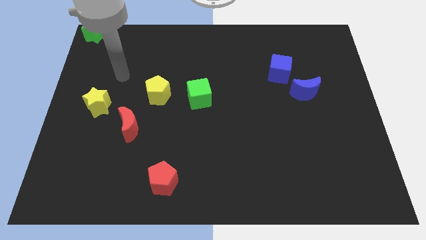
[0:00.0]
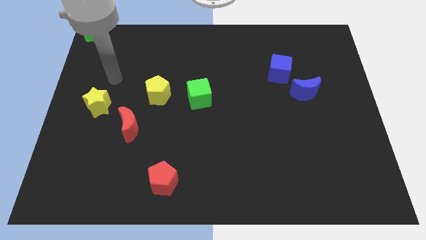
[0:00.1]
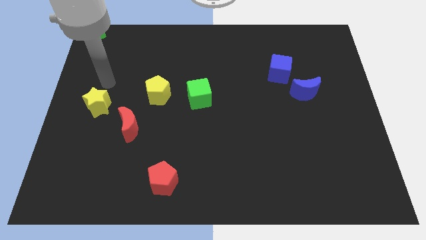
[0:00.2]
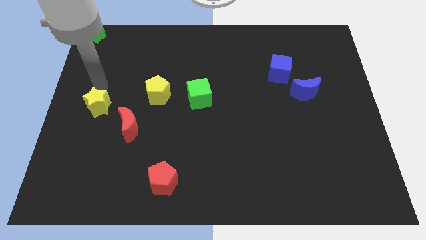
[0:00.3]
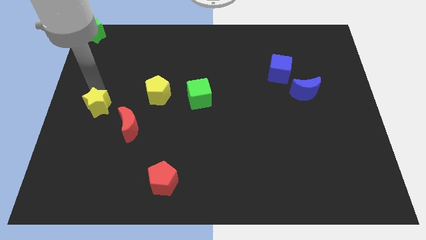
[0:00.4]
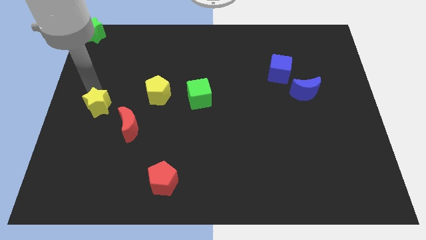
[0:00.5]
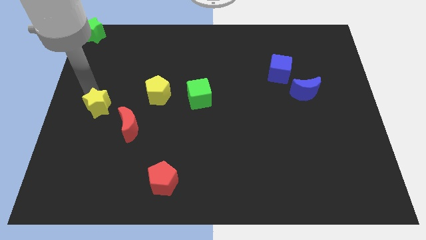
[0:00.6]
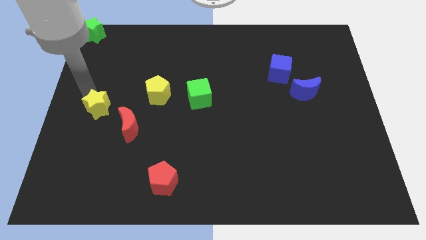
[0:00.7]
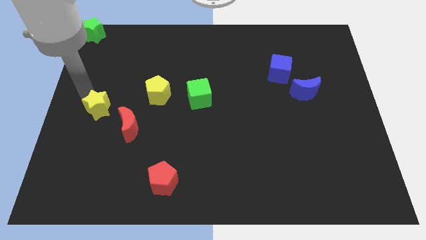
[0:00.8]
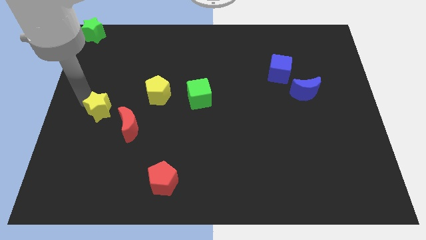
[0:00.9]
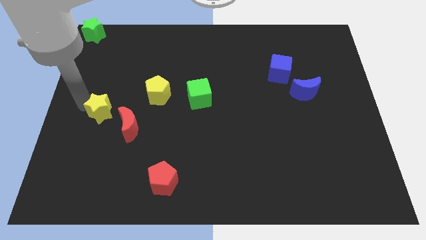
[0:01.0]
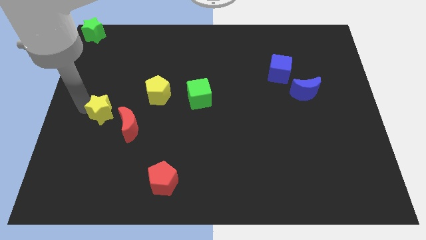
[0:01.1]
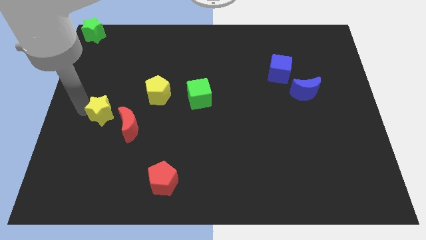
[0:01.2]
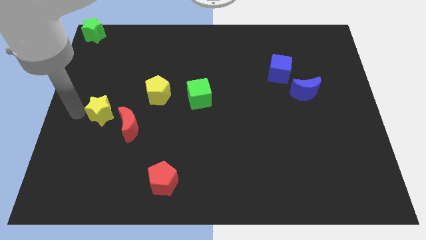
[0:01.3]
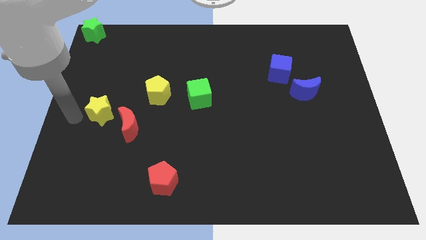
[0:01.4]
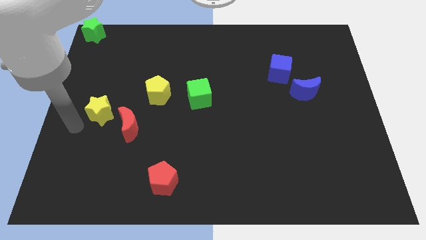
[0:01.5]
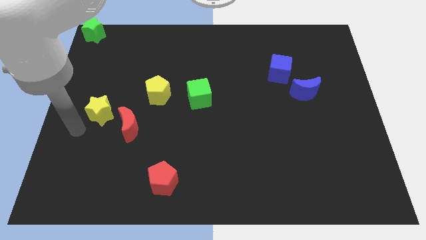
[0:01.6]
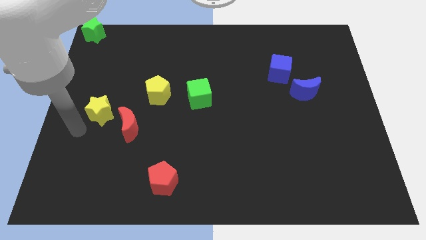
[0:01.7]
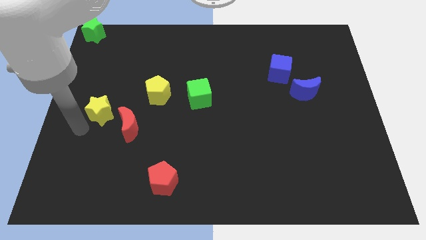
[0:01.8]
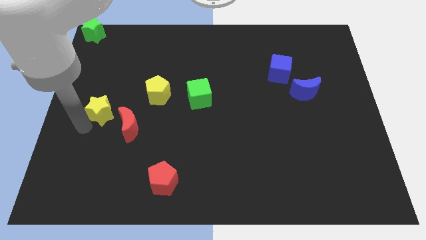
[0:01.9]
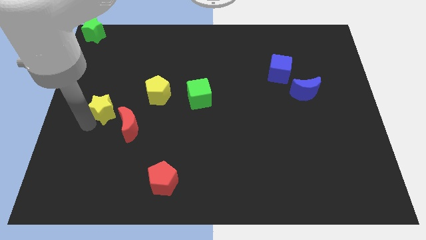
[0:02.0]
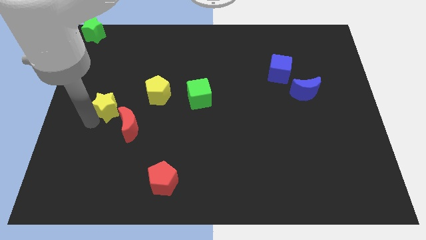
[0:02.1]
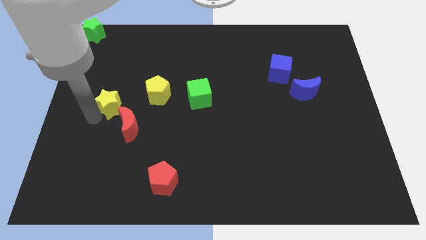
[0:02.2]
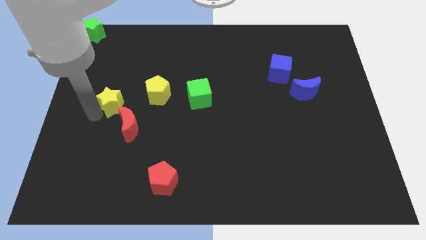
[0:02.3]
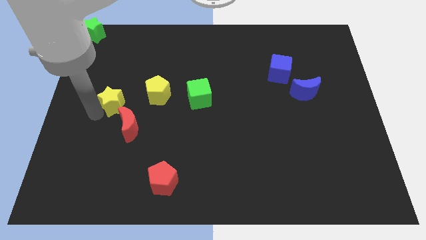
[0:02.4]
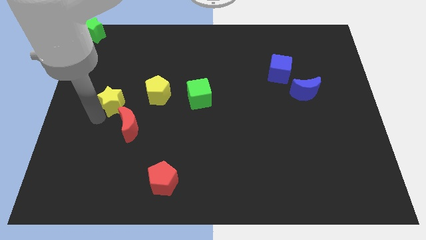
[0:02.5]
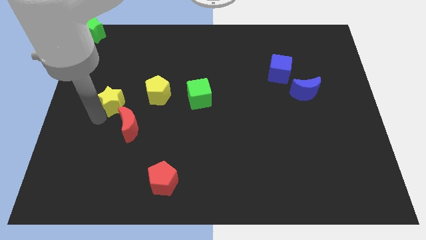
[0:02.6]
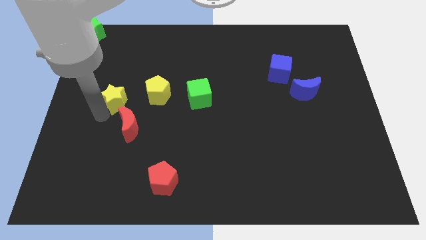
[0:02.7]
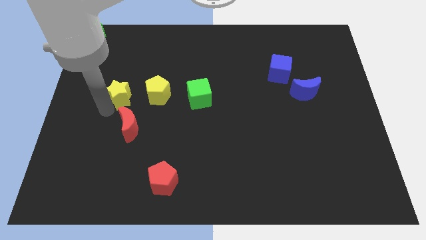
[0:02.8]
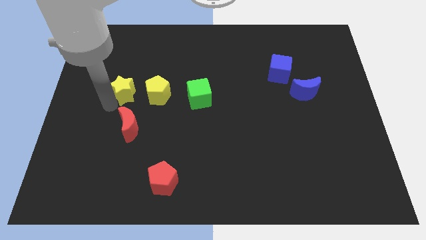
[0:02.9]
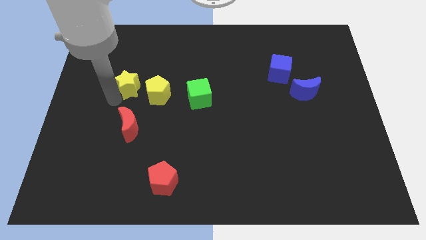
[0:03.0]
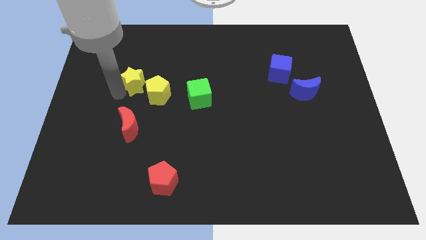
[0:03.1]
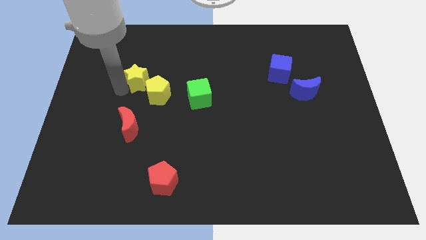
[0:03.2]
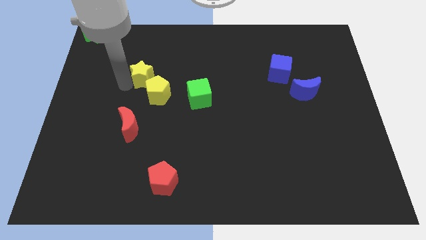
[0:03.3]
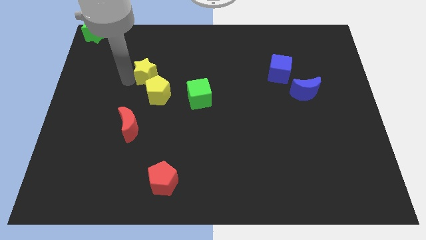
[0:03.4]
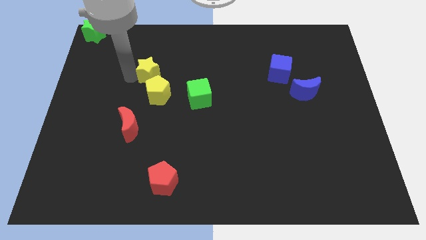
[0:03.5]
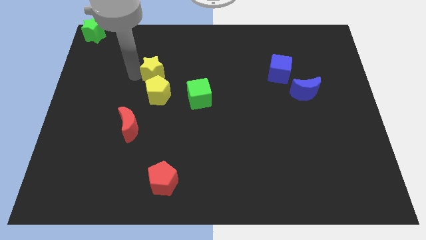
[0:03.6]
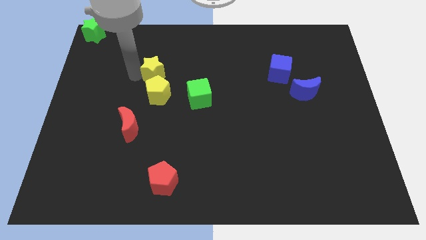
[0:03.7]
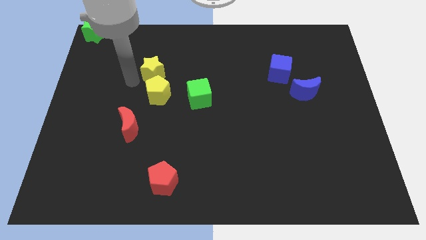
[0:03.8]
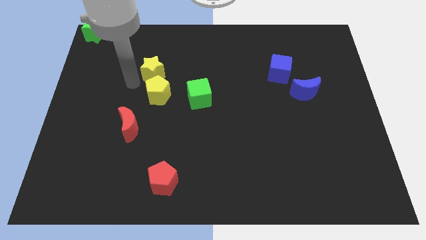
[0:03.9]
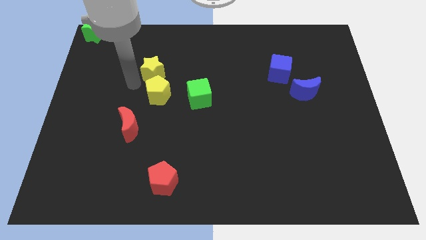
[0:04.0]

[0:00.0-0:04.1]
move yellow star to the top of the yellow pentagon

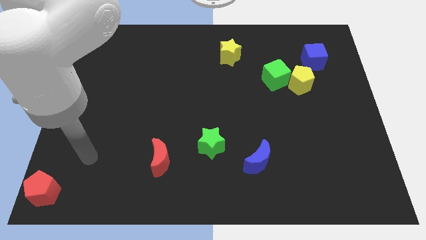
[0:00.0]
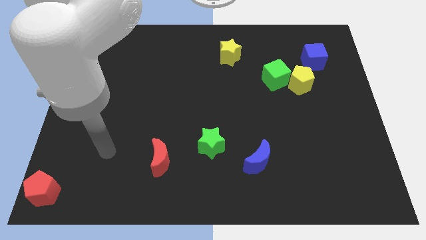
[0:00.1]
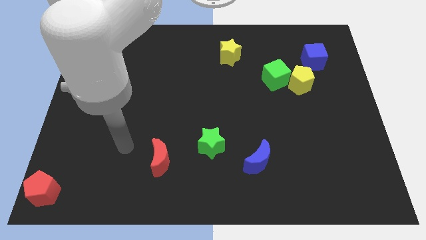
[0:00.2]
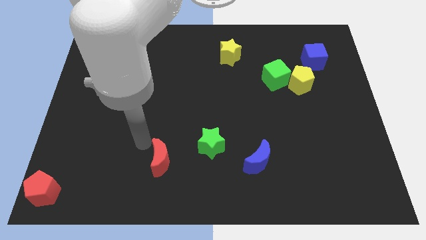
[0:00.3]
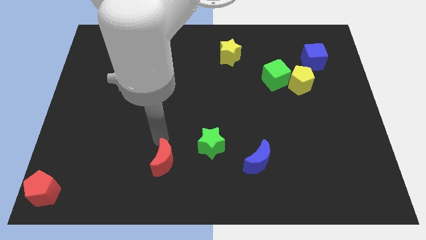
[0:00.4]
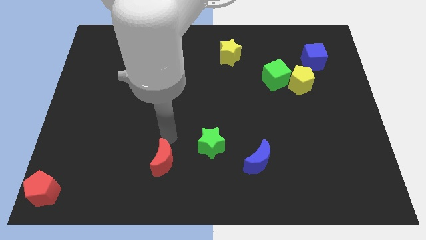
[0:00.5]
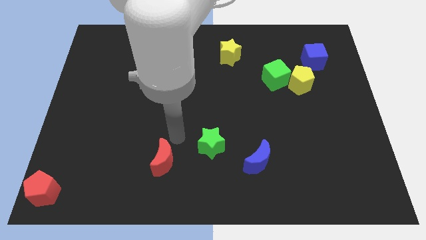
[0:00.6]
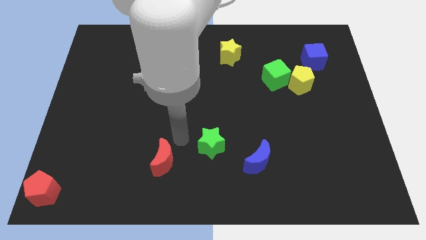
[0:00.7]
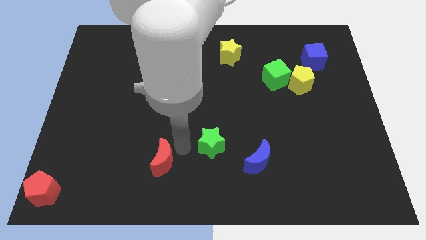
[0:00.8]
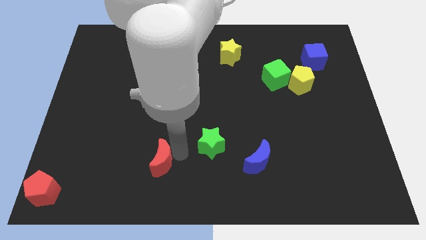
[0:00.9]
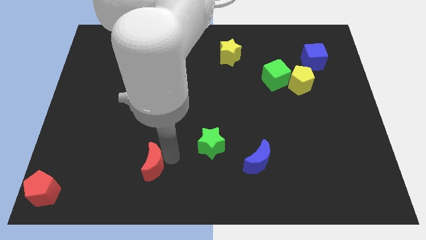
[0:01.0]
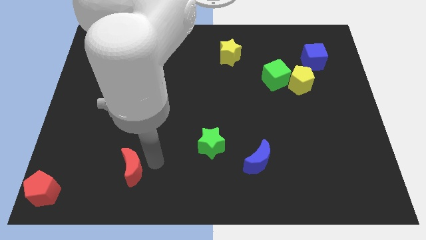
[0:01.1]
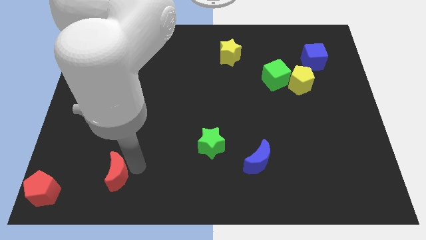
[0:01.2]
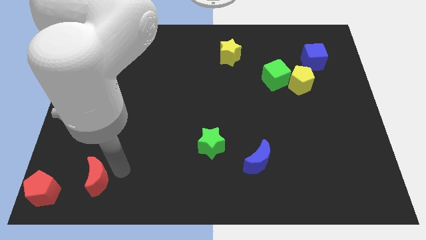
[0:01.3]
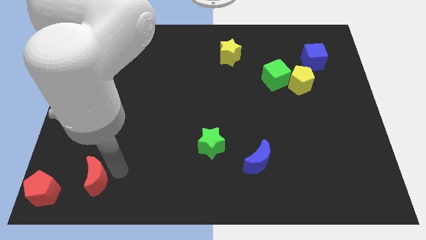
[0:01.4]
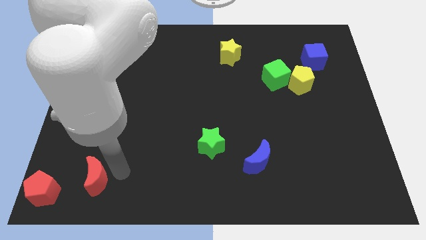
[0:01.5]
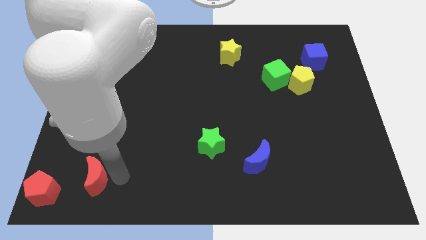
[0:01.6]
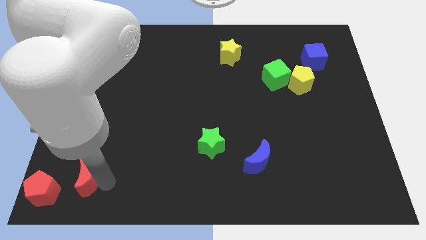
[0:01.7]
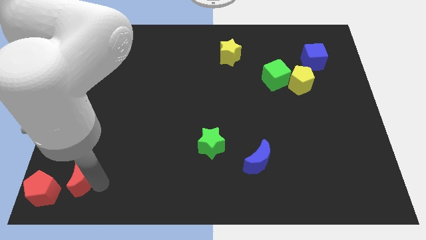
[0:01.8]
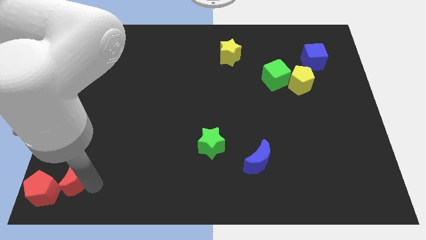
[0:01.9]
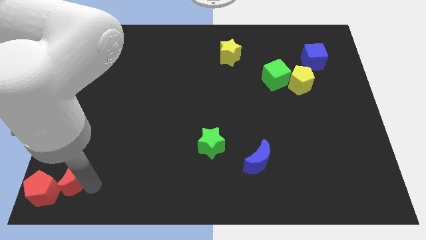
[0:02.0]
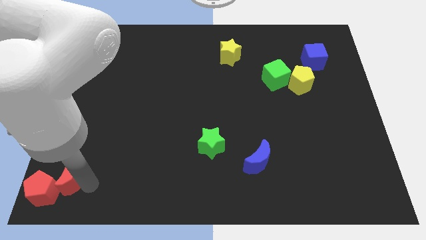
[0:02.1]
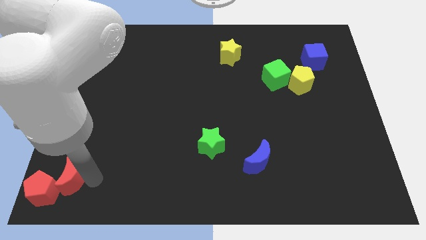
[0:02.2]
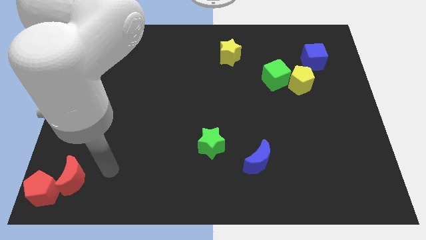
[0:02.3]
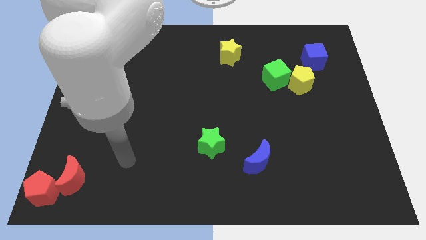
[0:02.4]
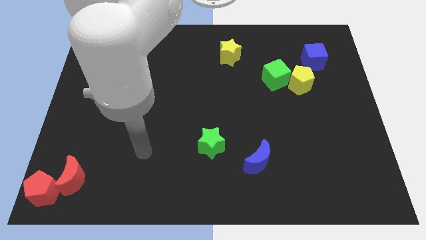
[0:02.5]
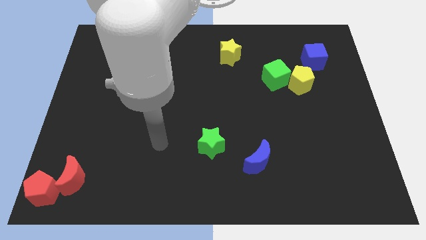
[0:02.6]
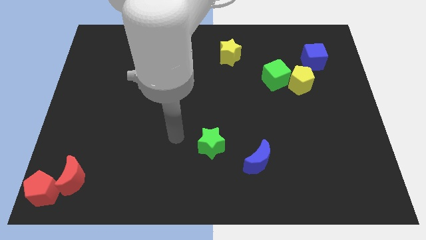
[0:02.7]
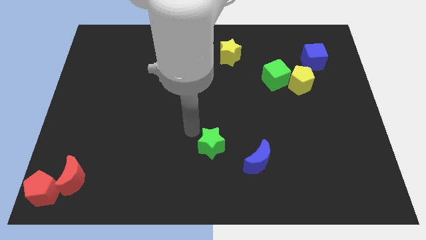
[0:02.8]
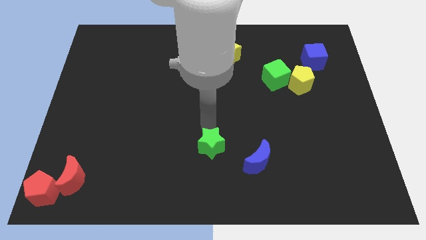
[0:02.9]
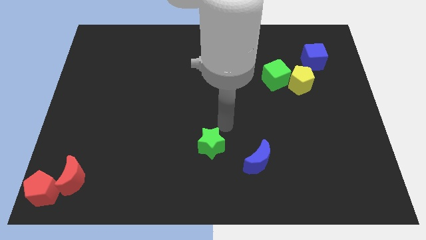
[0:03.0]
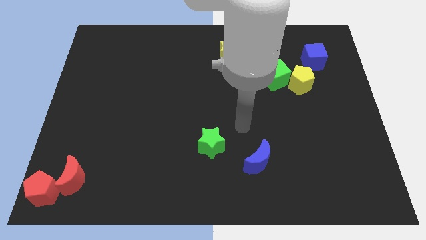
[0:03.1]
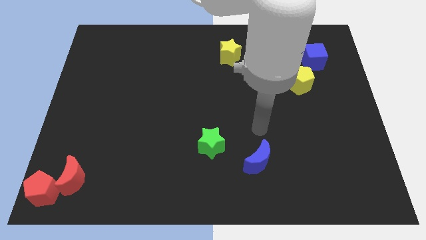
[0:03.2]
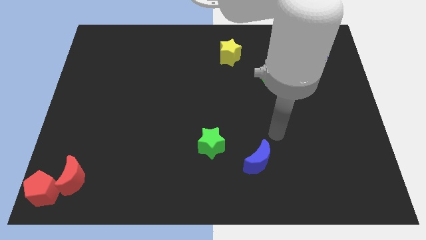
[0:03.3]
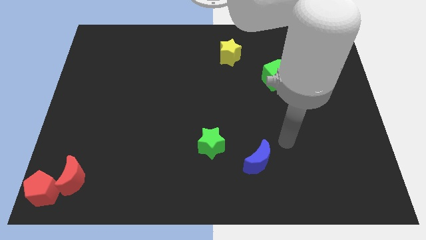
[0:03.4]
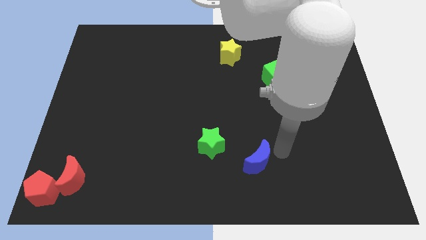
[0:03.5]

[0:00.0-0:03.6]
place the red crescent towards the top right side of the red pentagon

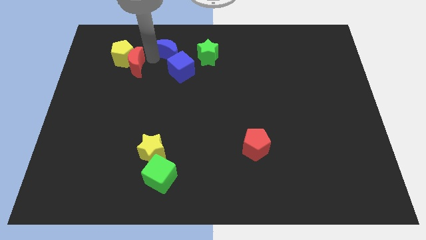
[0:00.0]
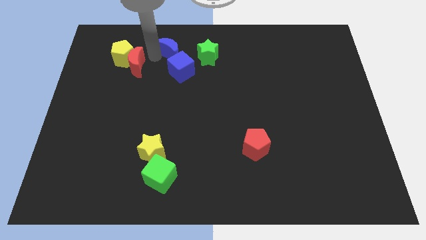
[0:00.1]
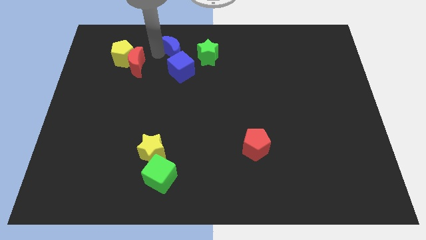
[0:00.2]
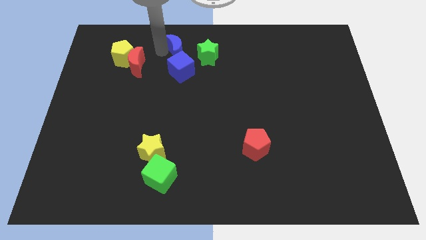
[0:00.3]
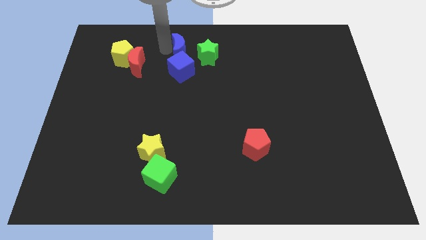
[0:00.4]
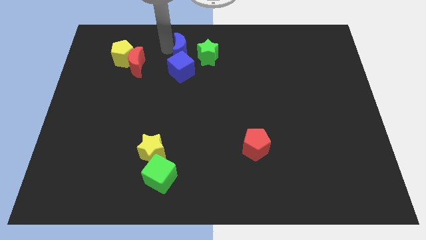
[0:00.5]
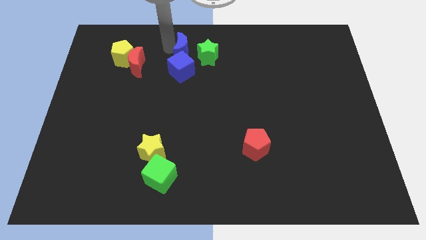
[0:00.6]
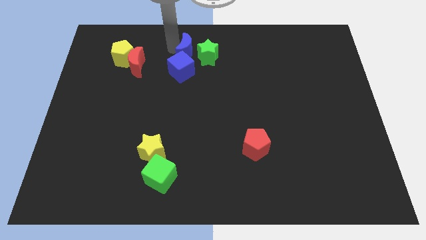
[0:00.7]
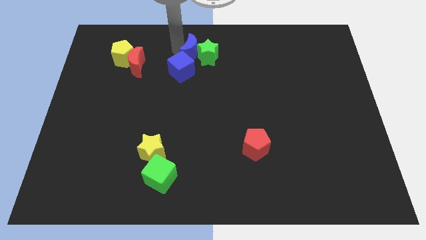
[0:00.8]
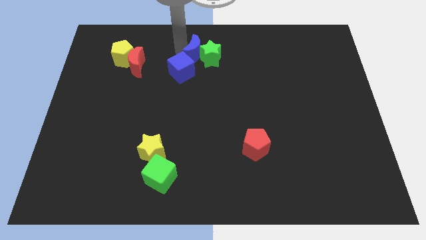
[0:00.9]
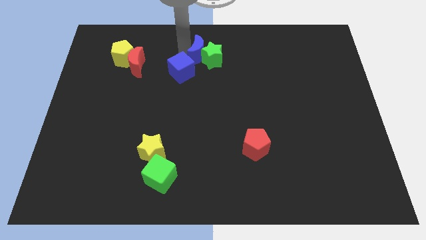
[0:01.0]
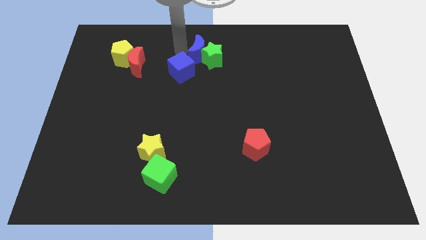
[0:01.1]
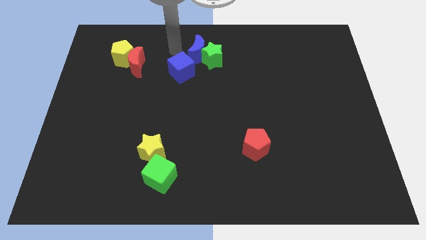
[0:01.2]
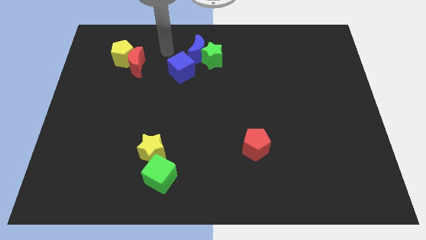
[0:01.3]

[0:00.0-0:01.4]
push the blue moon into the green star

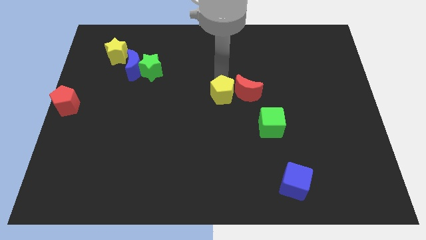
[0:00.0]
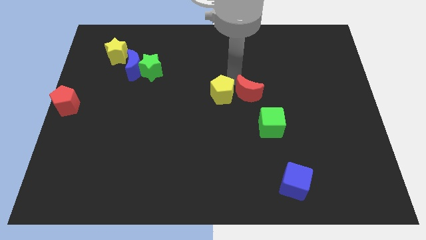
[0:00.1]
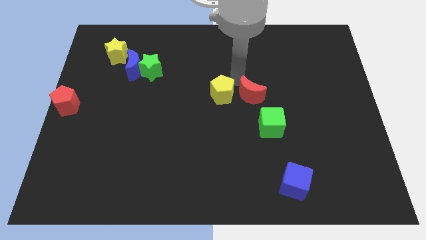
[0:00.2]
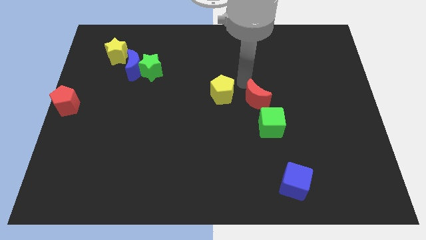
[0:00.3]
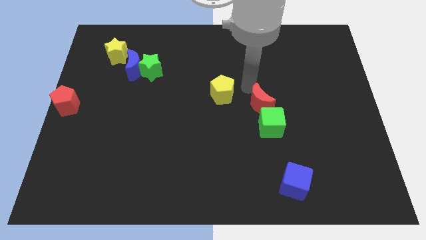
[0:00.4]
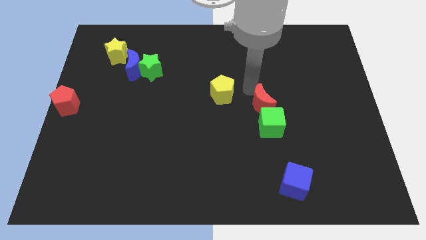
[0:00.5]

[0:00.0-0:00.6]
move the red crescent to the top side of the green cube
